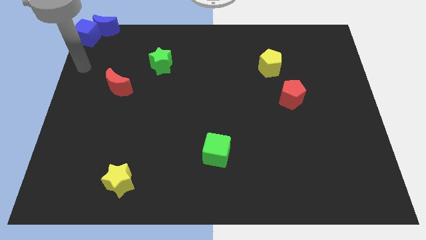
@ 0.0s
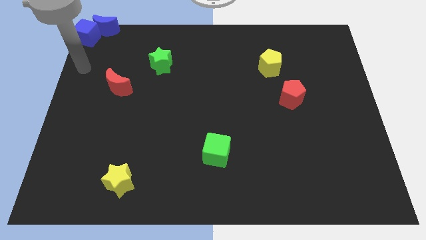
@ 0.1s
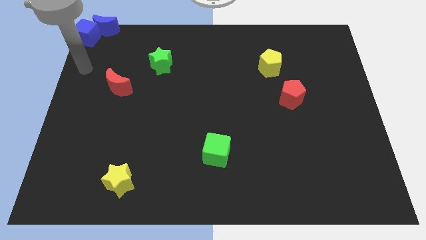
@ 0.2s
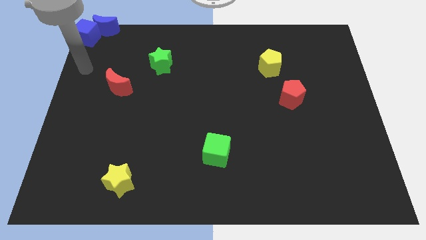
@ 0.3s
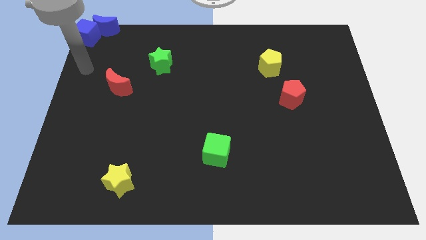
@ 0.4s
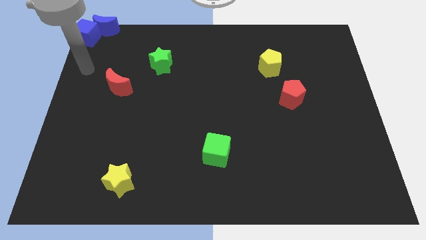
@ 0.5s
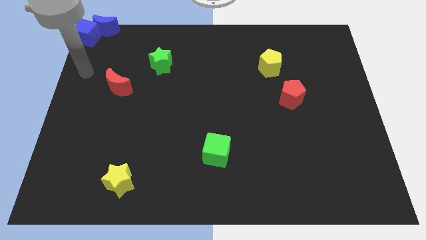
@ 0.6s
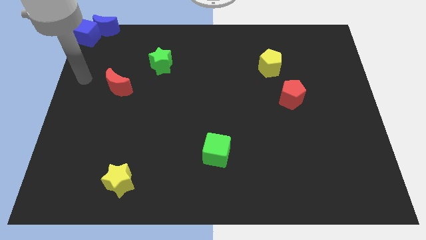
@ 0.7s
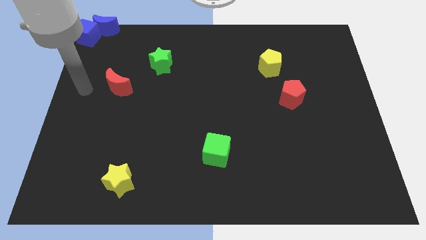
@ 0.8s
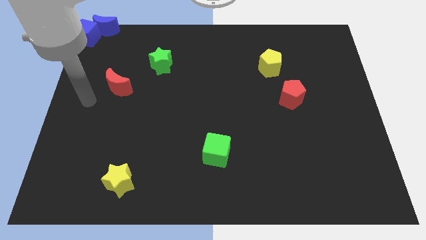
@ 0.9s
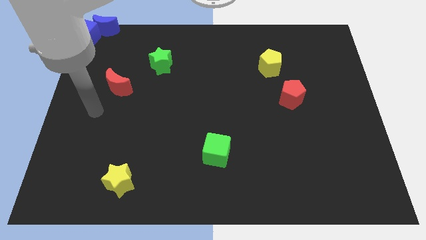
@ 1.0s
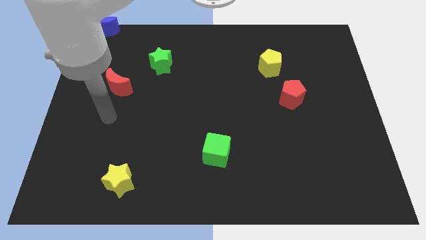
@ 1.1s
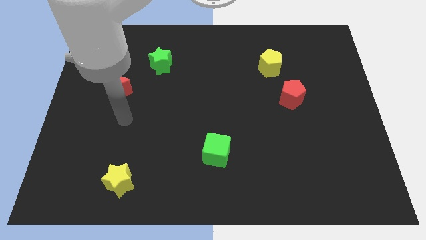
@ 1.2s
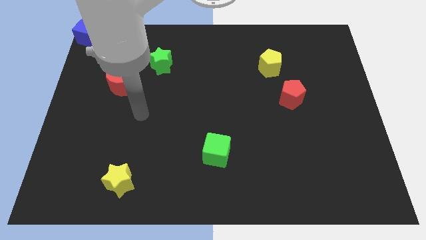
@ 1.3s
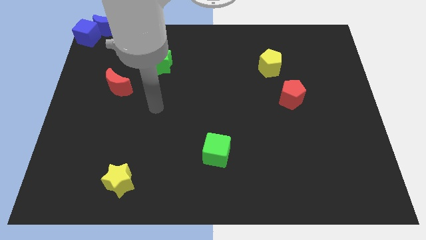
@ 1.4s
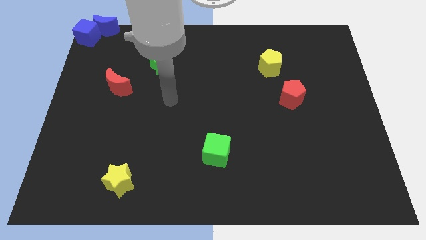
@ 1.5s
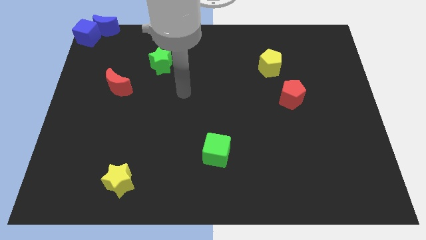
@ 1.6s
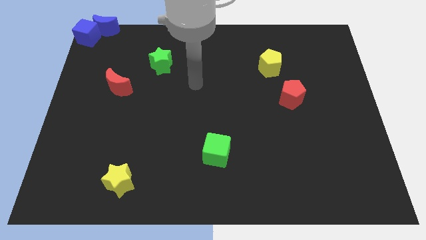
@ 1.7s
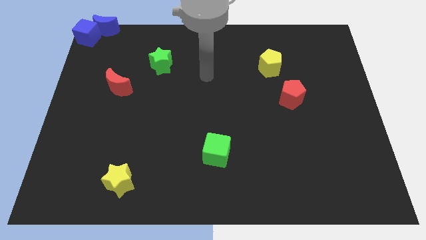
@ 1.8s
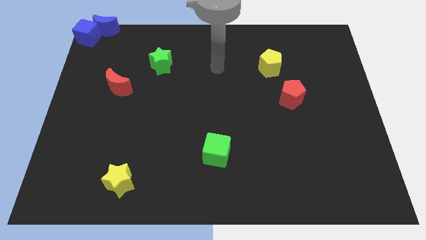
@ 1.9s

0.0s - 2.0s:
place your hand in between the green star and yellow pentagon

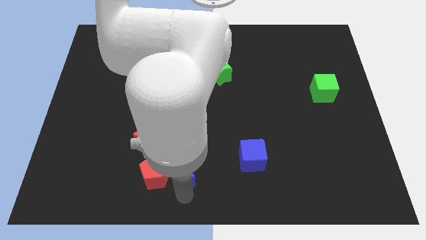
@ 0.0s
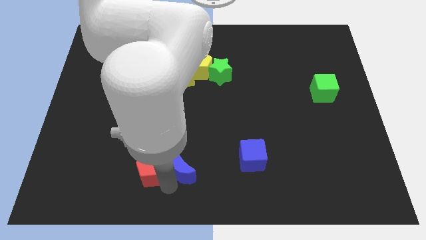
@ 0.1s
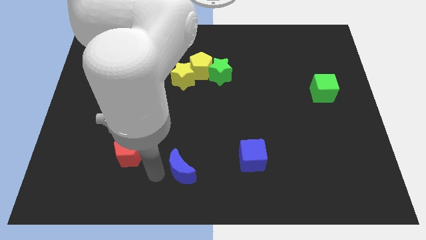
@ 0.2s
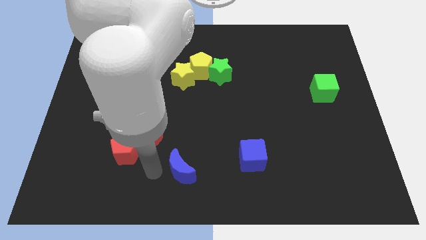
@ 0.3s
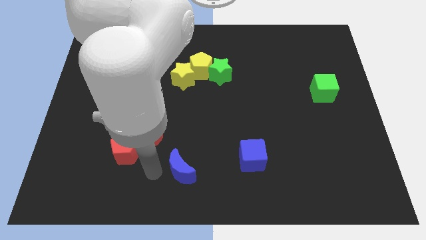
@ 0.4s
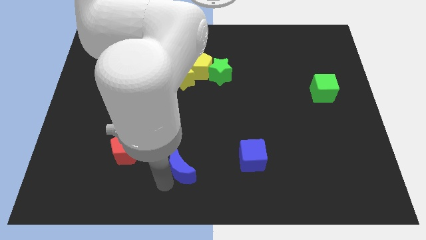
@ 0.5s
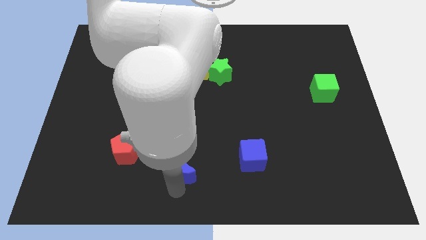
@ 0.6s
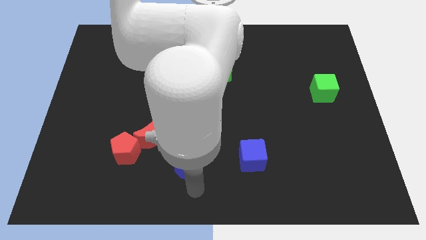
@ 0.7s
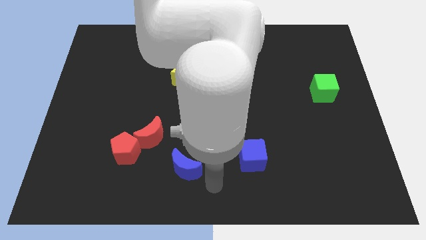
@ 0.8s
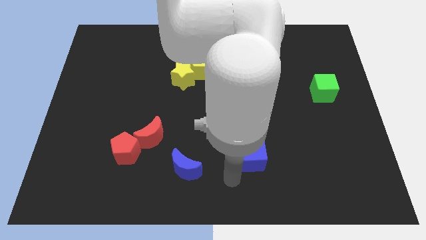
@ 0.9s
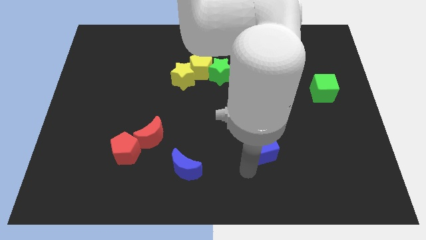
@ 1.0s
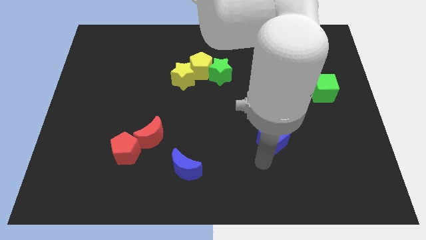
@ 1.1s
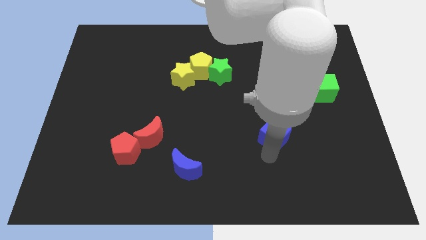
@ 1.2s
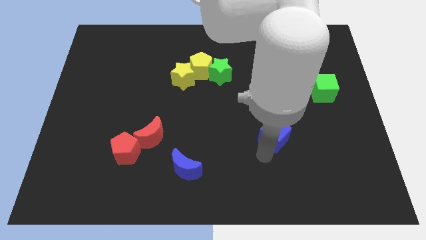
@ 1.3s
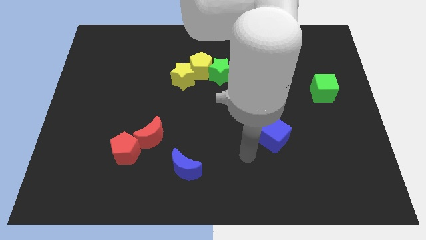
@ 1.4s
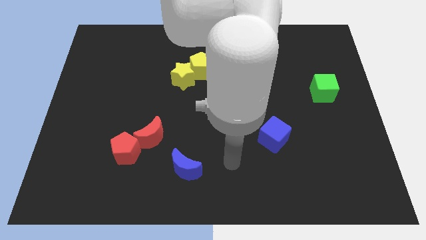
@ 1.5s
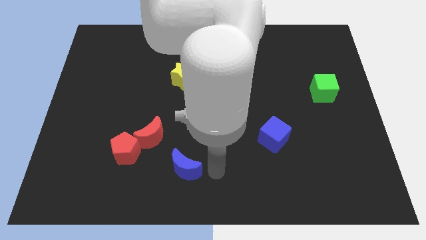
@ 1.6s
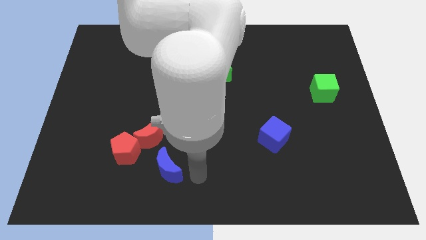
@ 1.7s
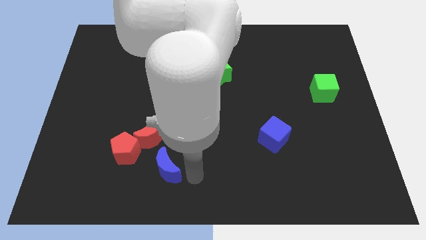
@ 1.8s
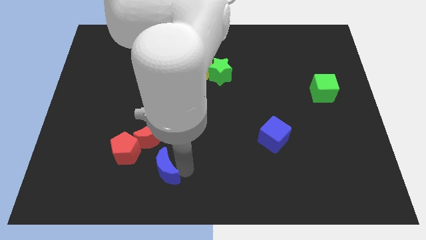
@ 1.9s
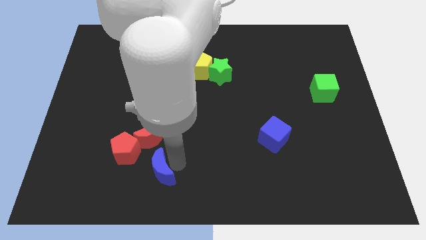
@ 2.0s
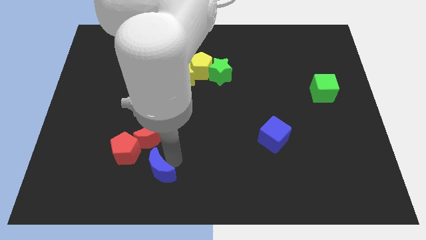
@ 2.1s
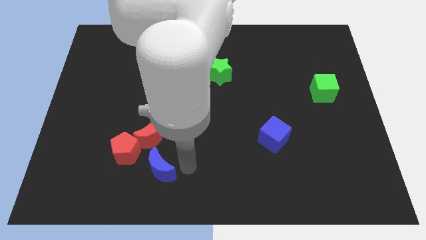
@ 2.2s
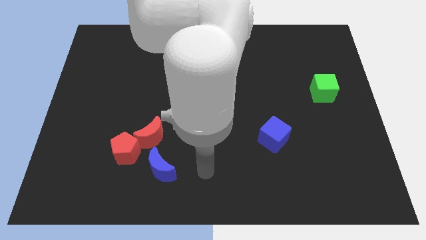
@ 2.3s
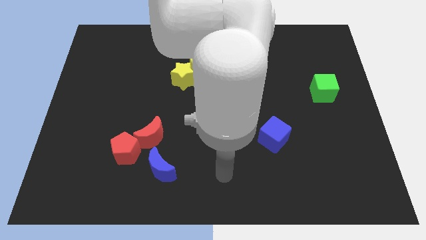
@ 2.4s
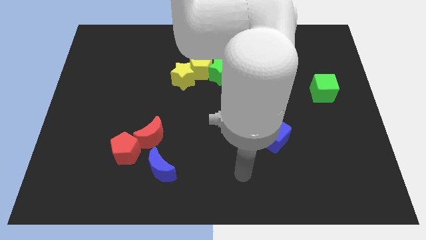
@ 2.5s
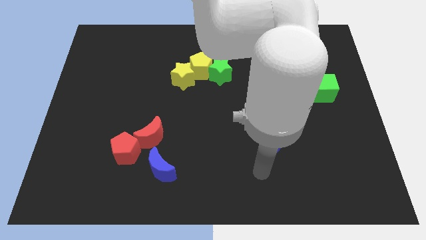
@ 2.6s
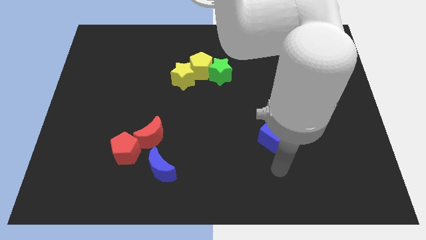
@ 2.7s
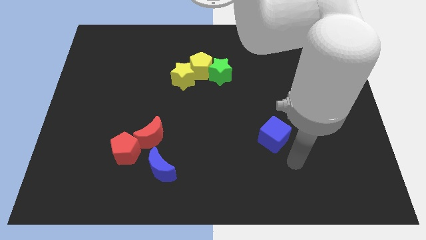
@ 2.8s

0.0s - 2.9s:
drag the blue cube slightly upwards

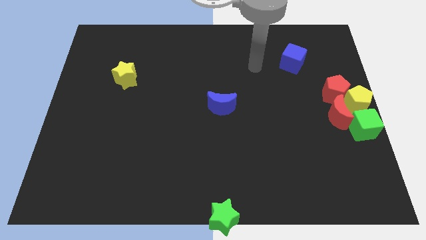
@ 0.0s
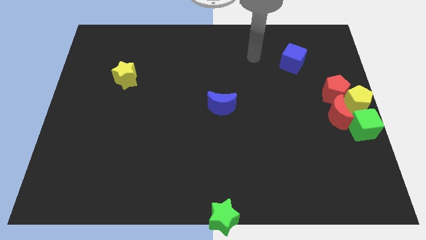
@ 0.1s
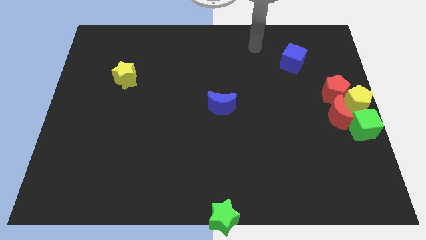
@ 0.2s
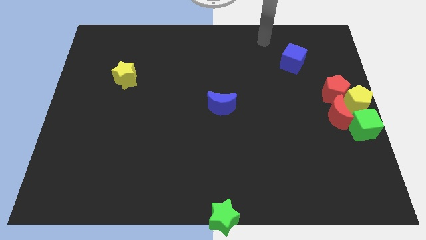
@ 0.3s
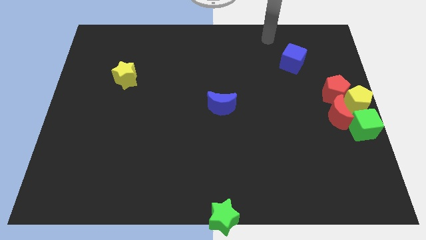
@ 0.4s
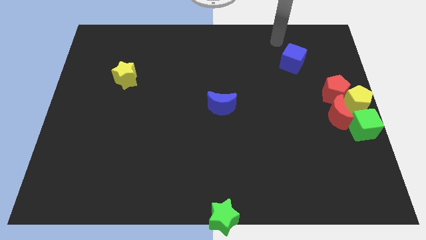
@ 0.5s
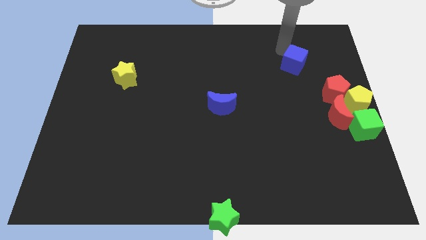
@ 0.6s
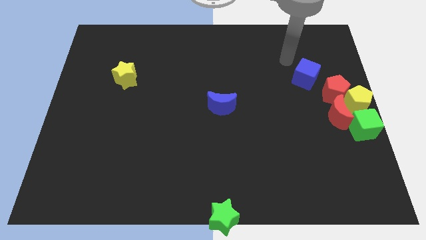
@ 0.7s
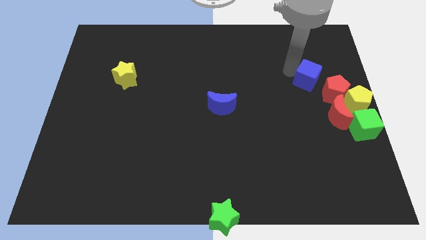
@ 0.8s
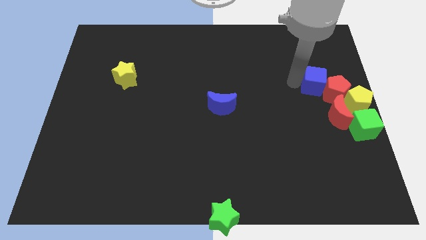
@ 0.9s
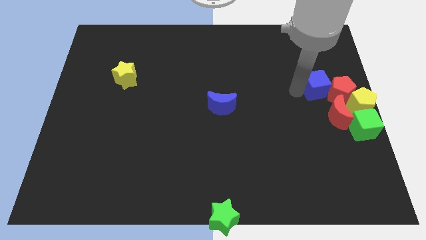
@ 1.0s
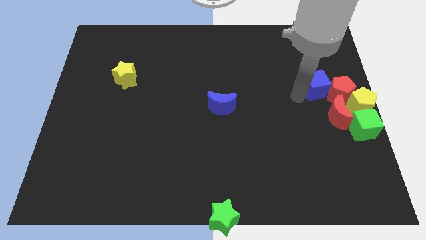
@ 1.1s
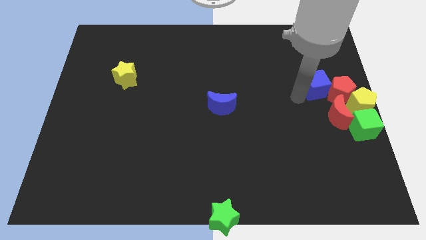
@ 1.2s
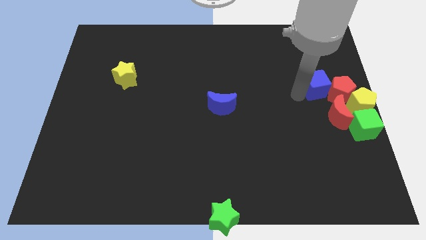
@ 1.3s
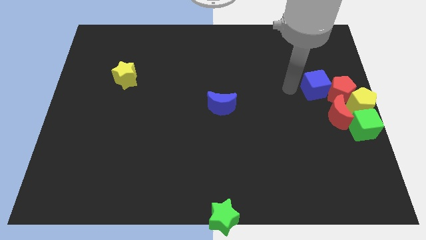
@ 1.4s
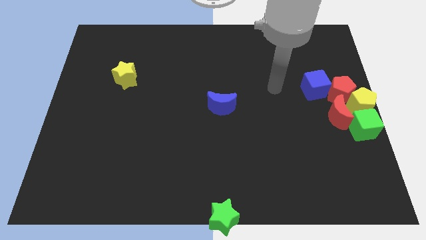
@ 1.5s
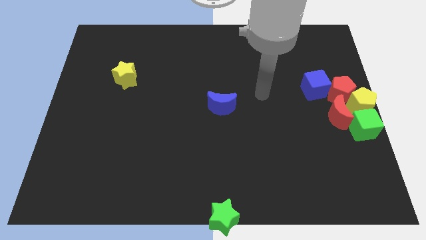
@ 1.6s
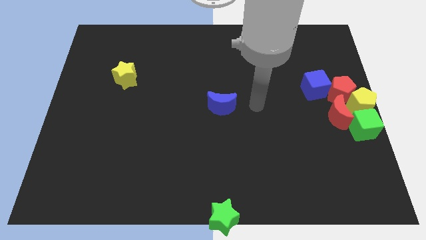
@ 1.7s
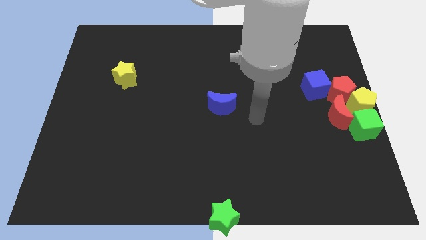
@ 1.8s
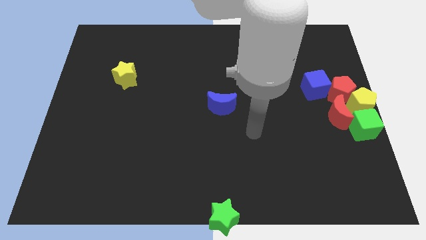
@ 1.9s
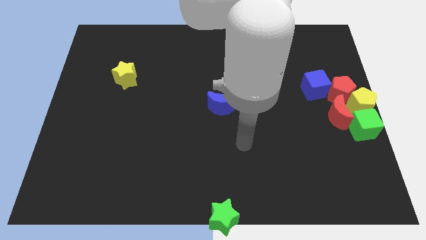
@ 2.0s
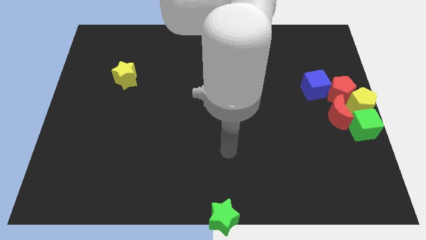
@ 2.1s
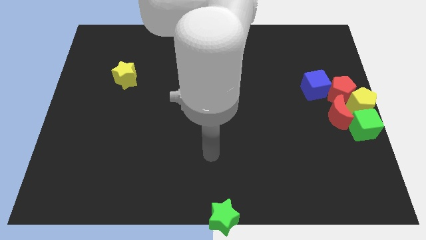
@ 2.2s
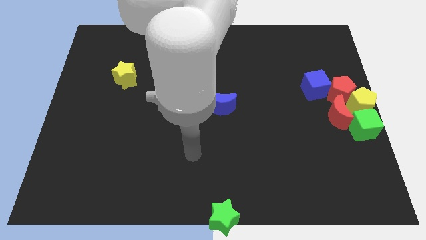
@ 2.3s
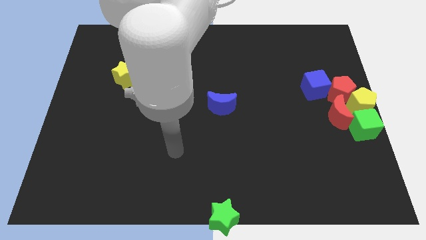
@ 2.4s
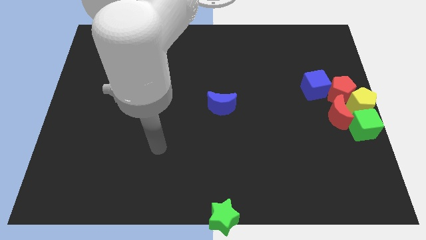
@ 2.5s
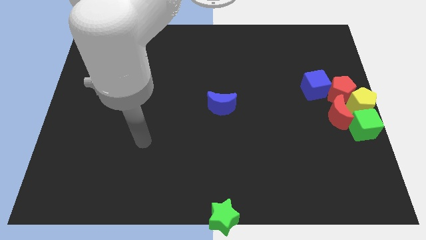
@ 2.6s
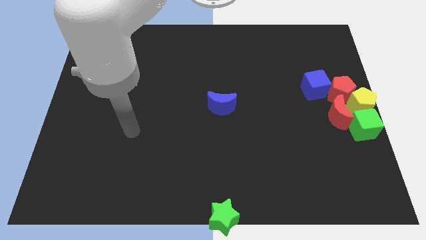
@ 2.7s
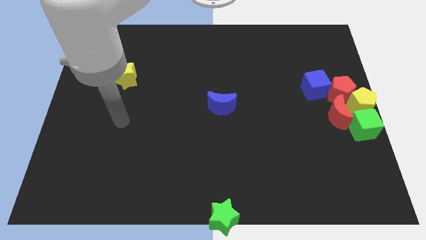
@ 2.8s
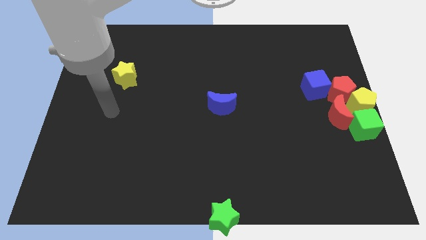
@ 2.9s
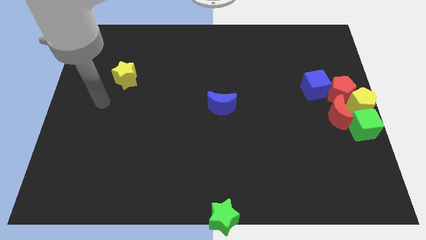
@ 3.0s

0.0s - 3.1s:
place blue cube to the left of red pentagon

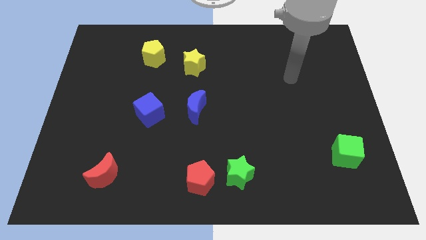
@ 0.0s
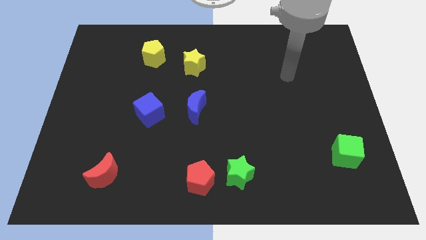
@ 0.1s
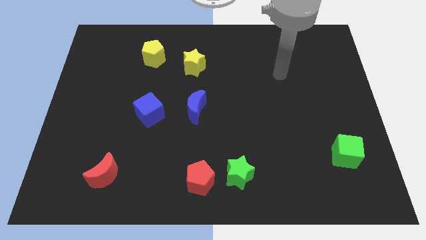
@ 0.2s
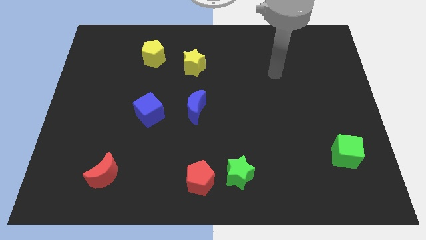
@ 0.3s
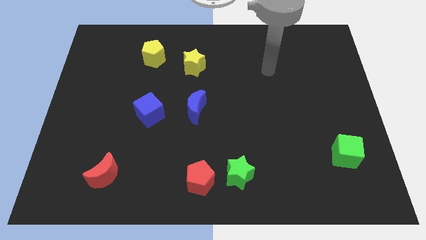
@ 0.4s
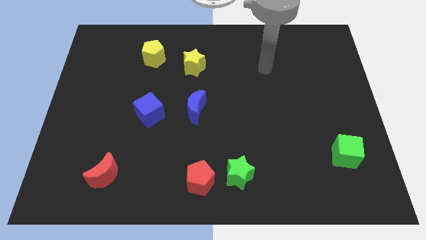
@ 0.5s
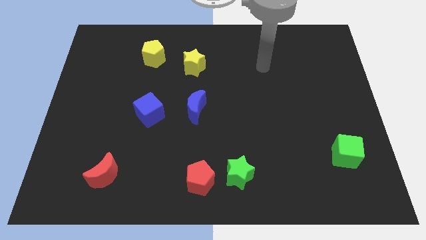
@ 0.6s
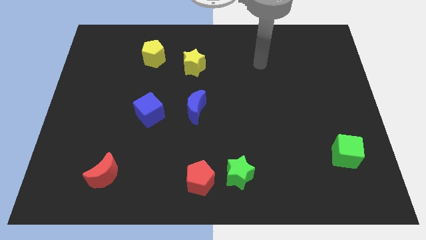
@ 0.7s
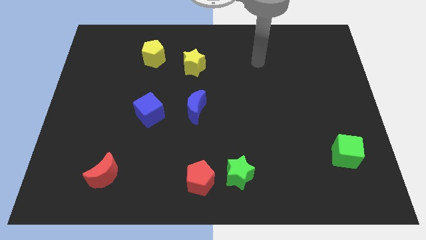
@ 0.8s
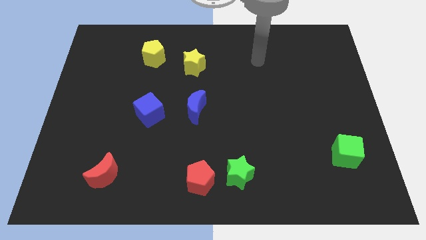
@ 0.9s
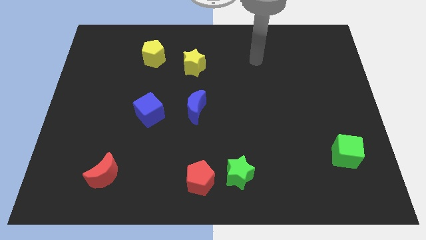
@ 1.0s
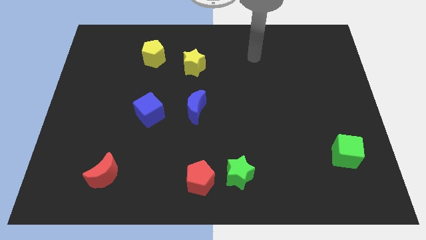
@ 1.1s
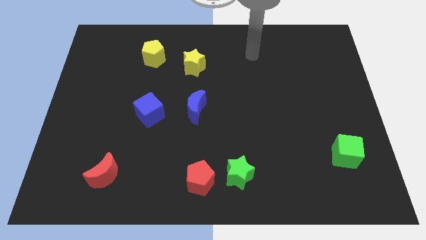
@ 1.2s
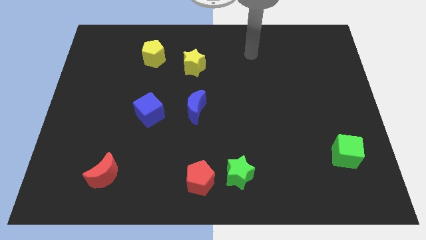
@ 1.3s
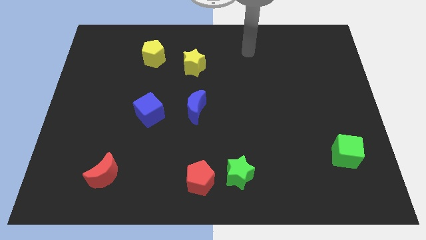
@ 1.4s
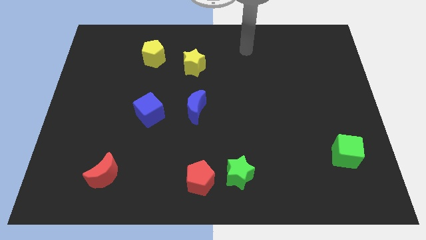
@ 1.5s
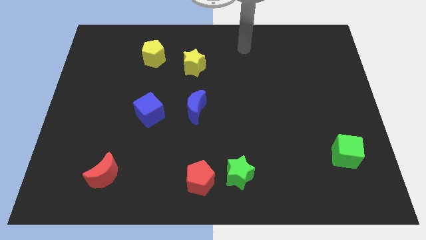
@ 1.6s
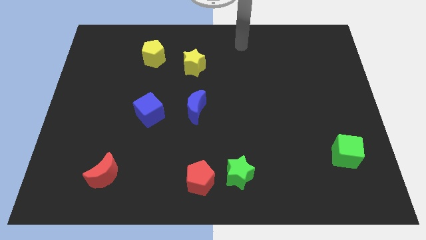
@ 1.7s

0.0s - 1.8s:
move your arm slightly towards the top center of the board
